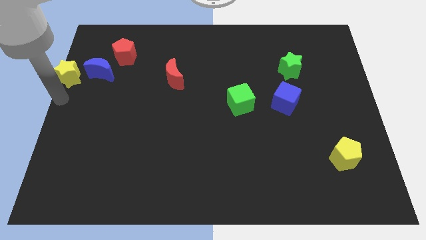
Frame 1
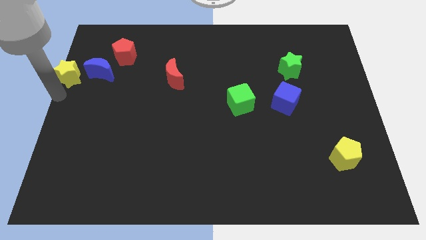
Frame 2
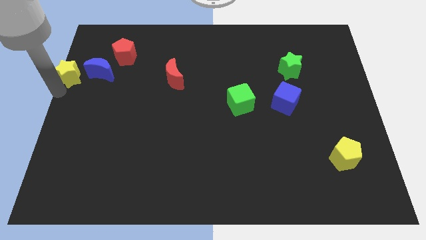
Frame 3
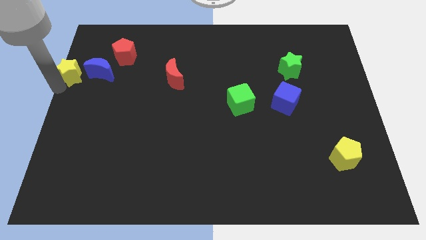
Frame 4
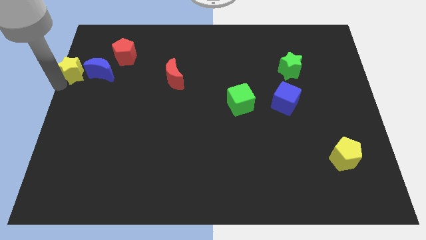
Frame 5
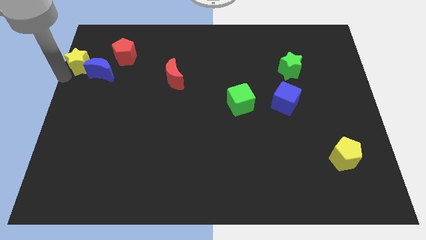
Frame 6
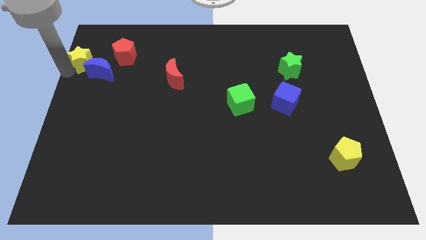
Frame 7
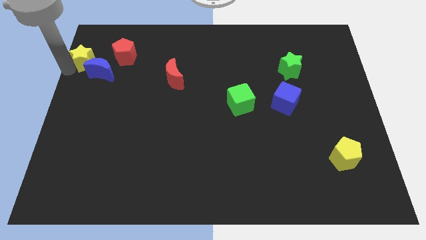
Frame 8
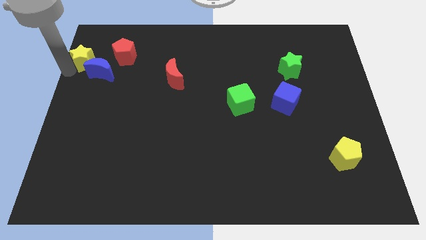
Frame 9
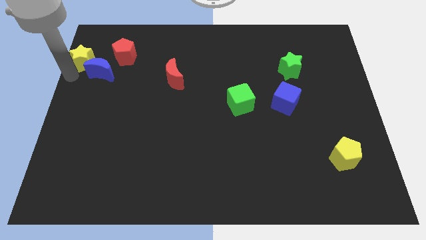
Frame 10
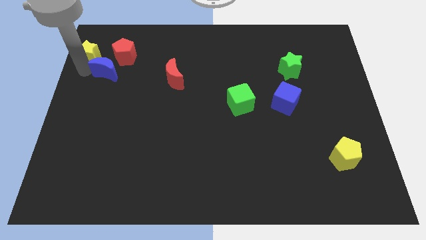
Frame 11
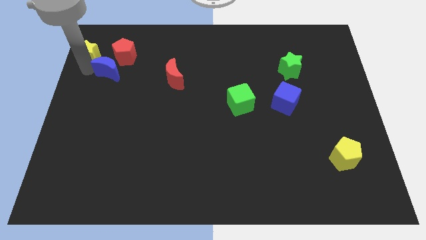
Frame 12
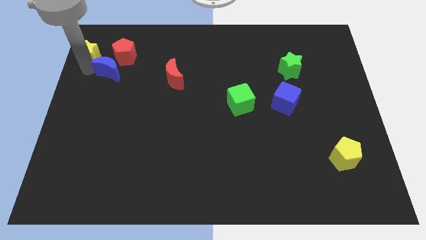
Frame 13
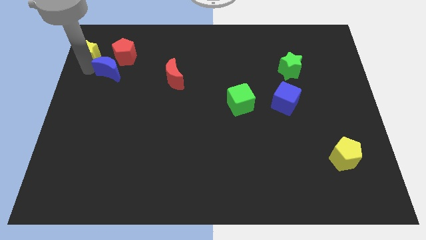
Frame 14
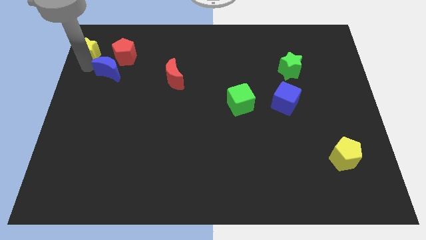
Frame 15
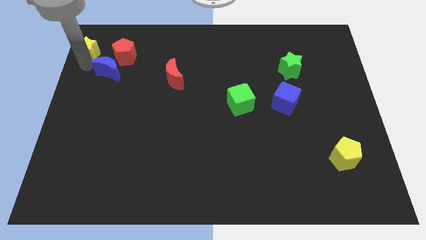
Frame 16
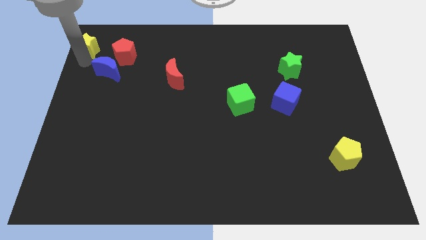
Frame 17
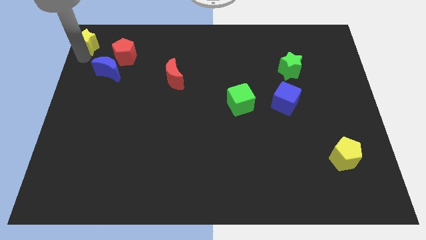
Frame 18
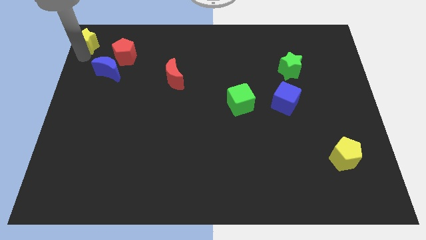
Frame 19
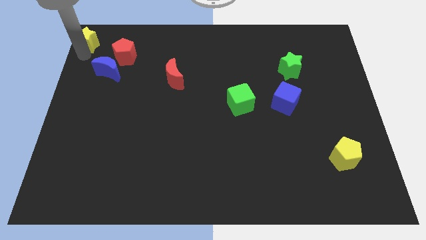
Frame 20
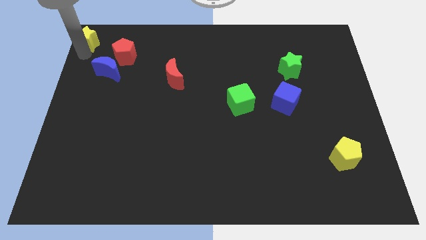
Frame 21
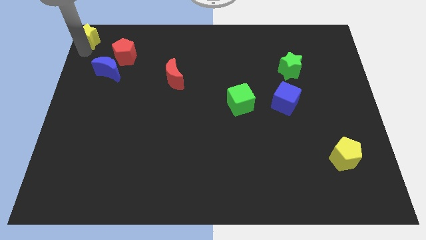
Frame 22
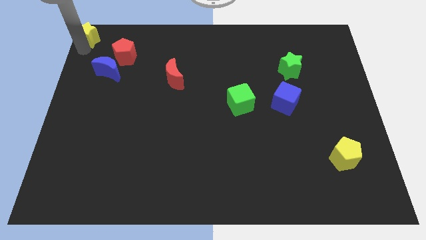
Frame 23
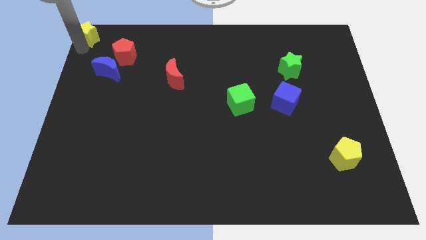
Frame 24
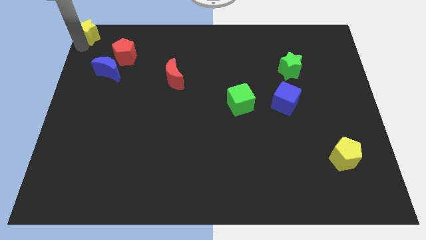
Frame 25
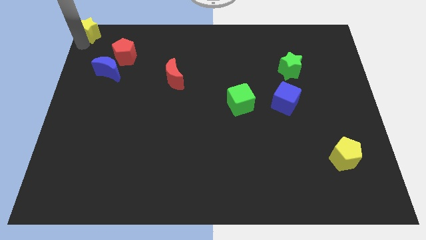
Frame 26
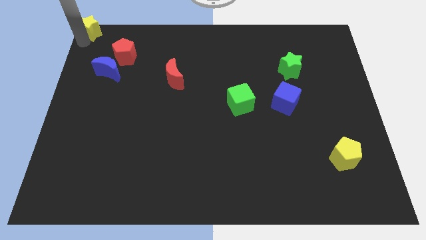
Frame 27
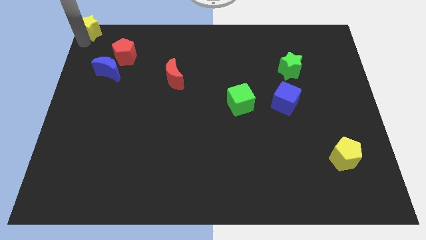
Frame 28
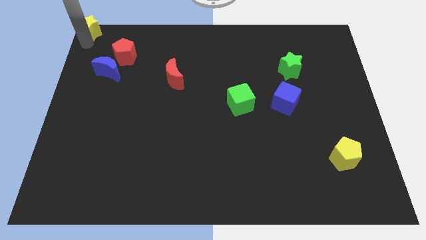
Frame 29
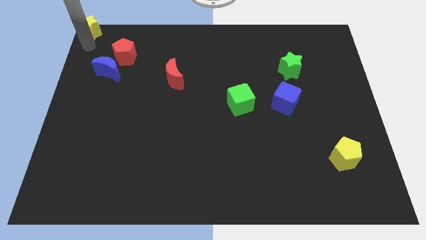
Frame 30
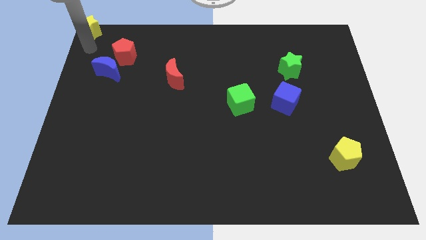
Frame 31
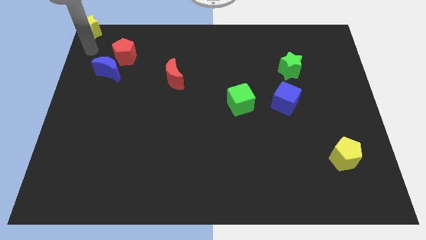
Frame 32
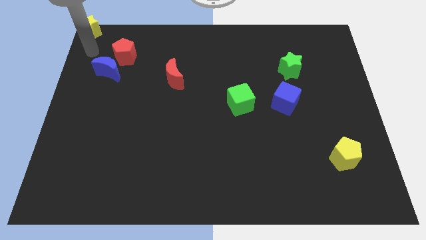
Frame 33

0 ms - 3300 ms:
place the yellow star towards the top left corner

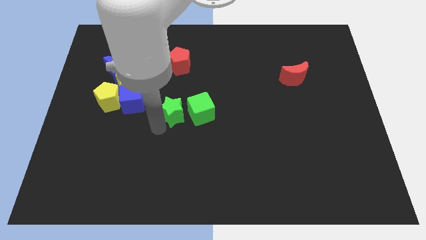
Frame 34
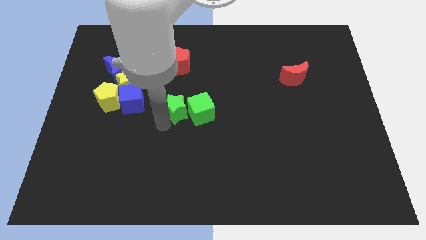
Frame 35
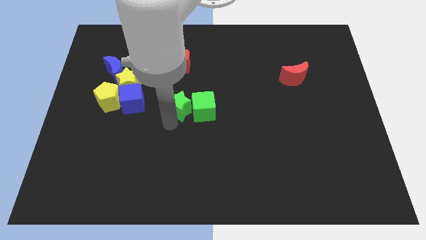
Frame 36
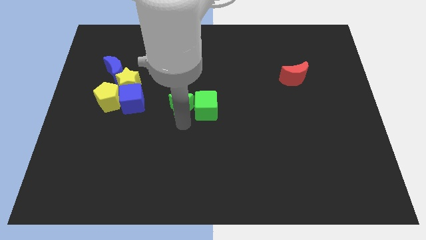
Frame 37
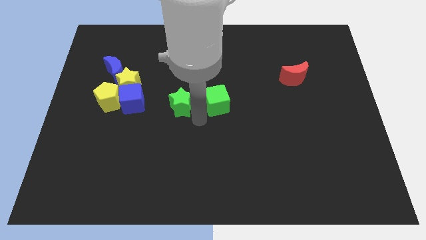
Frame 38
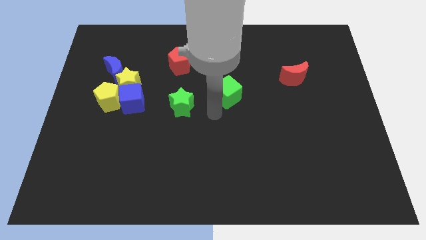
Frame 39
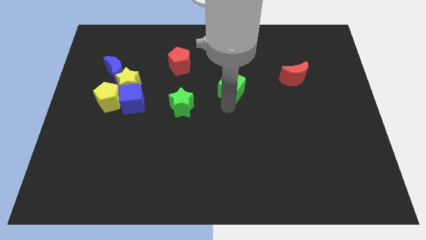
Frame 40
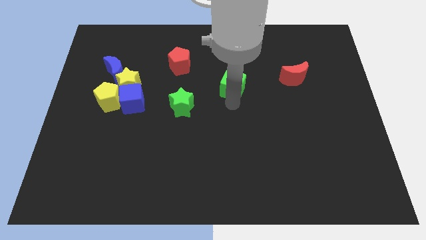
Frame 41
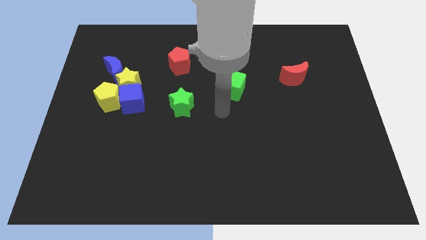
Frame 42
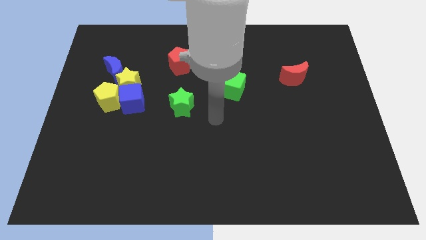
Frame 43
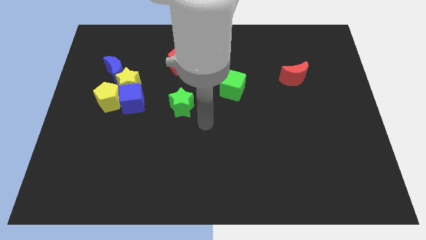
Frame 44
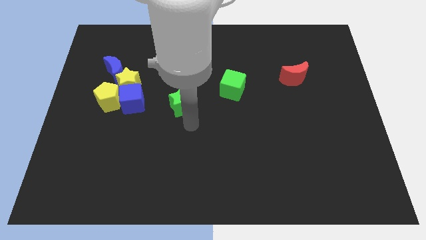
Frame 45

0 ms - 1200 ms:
move green cube away from the green star

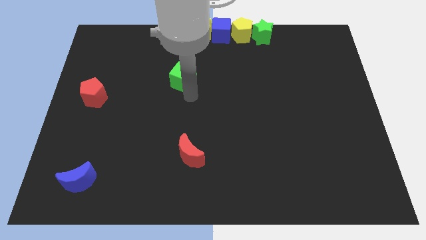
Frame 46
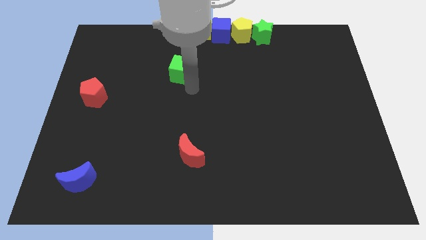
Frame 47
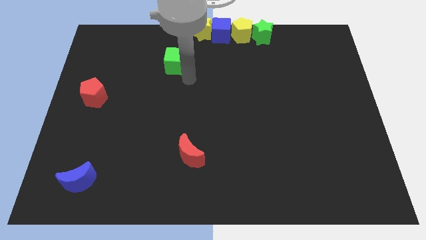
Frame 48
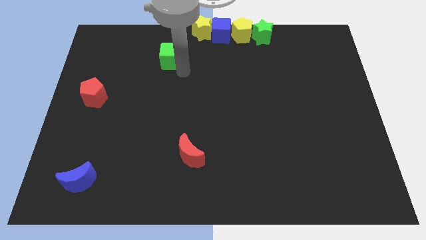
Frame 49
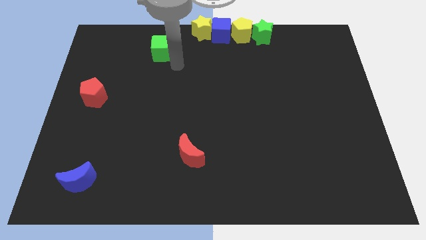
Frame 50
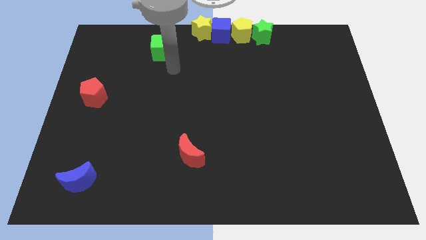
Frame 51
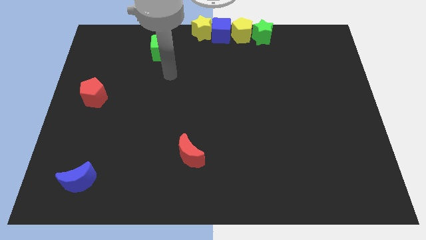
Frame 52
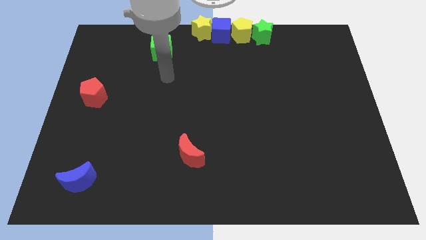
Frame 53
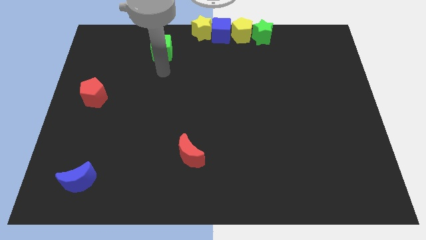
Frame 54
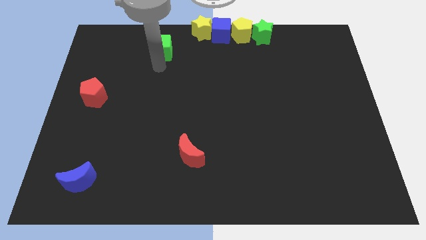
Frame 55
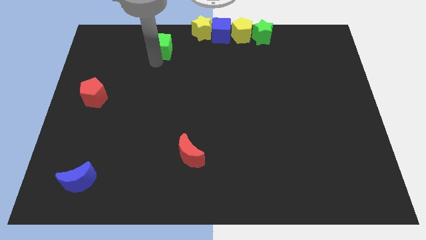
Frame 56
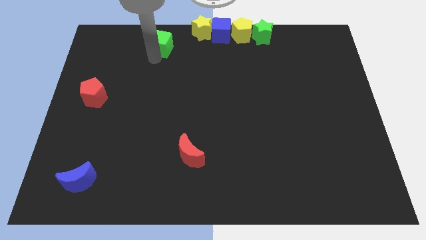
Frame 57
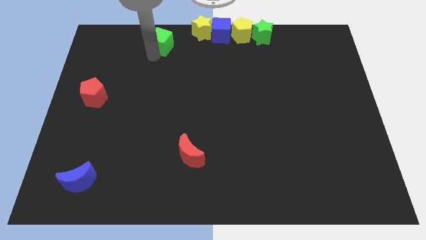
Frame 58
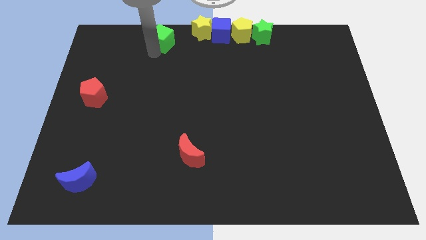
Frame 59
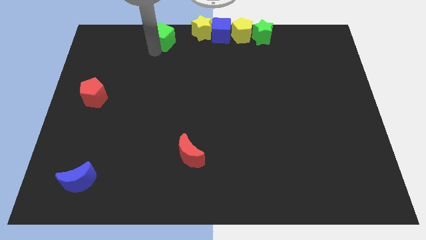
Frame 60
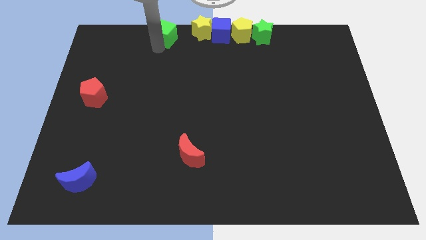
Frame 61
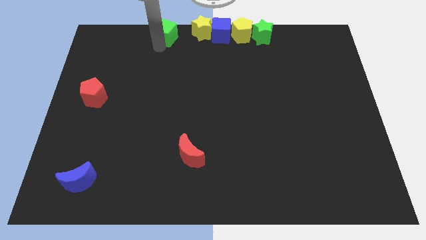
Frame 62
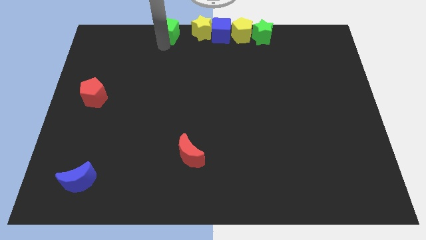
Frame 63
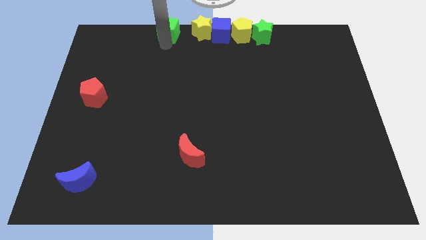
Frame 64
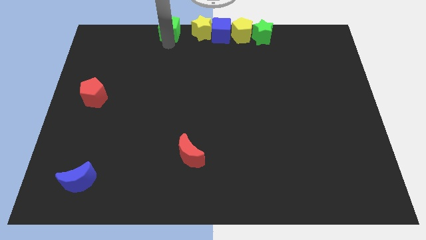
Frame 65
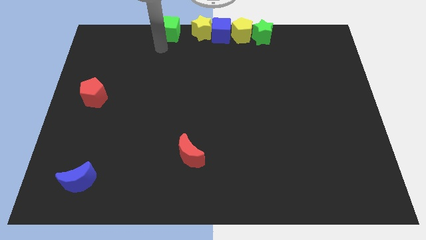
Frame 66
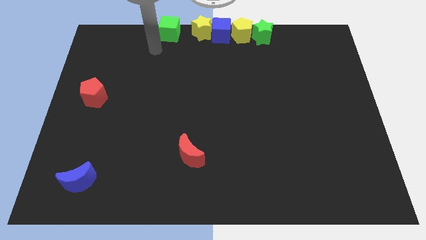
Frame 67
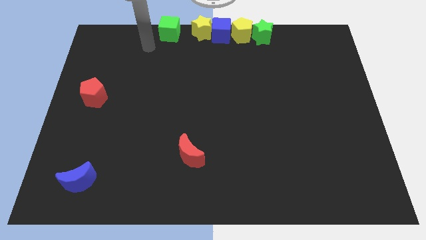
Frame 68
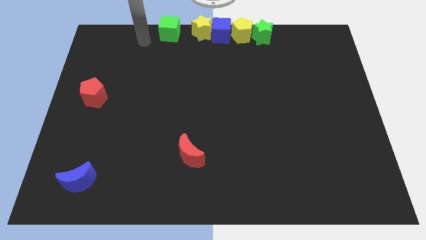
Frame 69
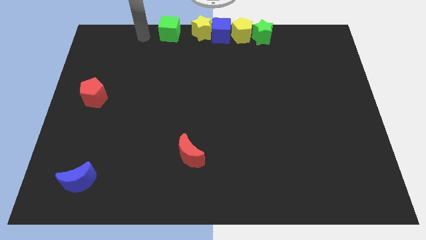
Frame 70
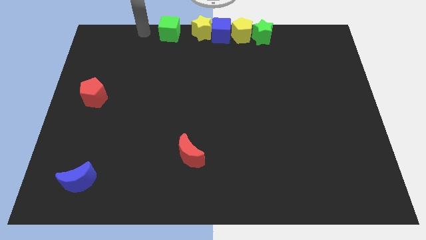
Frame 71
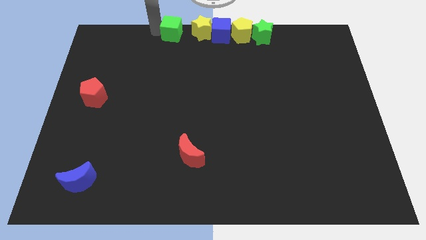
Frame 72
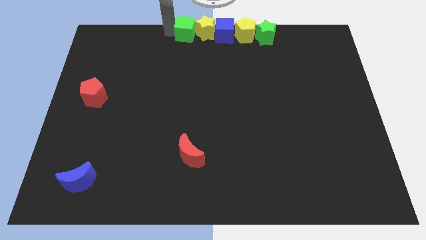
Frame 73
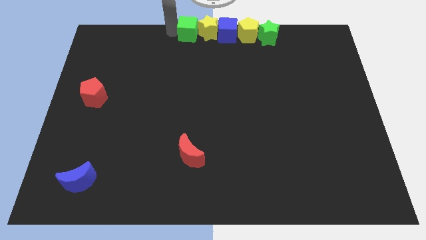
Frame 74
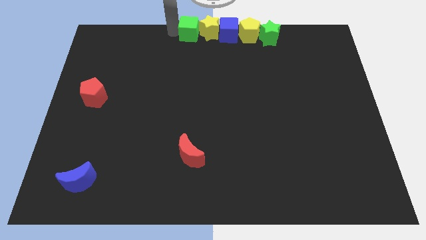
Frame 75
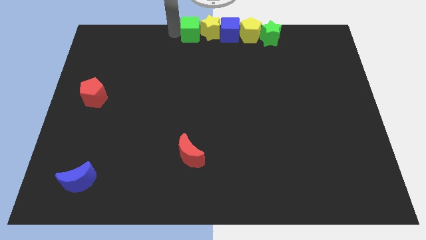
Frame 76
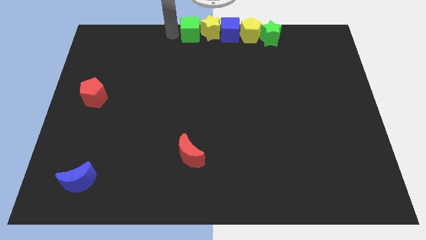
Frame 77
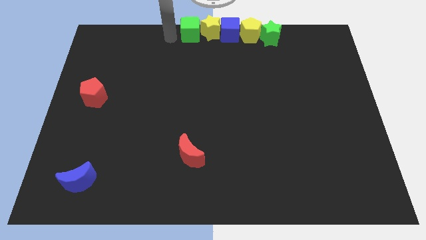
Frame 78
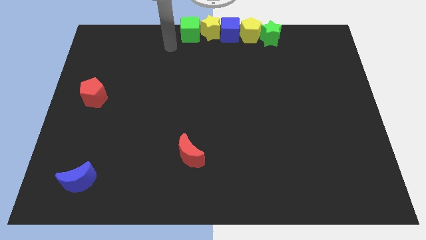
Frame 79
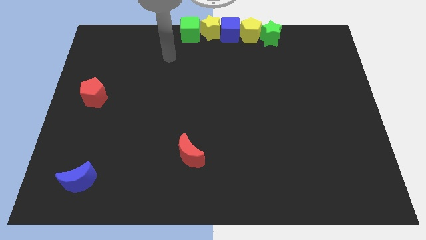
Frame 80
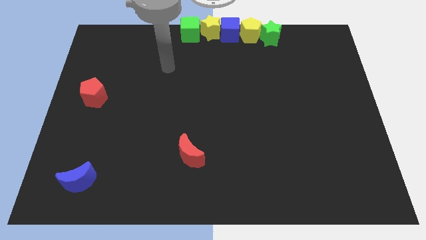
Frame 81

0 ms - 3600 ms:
push the green cube to the left of the yellow star

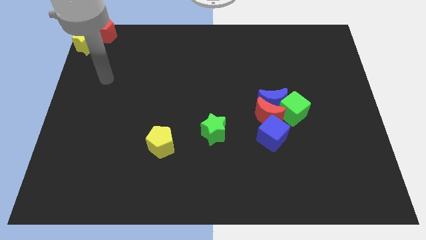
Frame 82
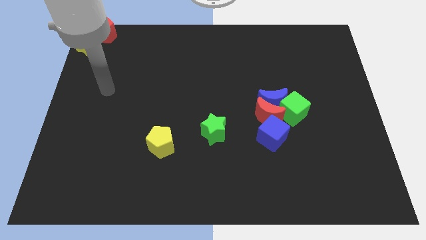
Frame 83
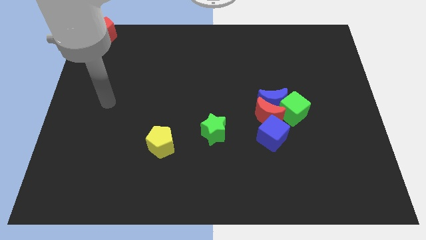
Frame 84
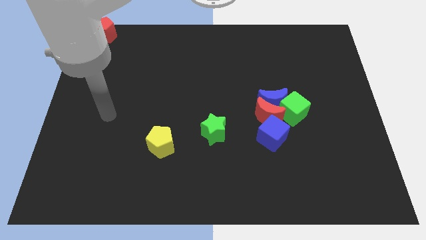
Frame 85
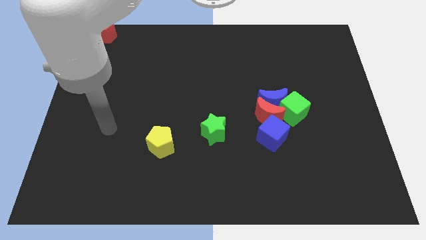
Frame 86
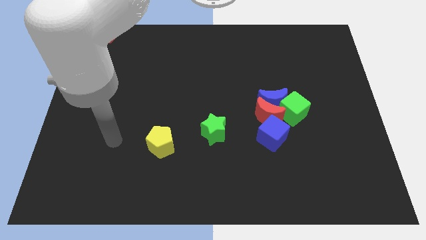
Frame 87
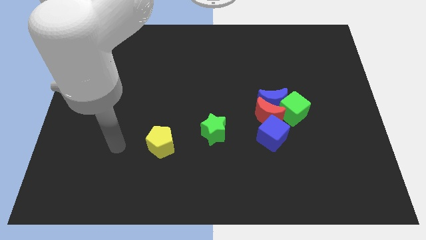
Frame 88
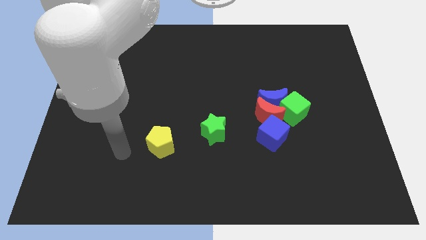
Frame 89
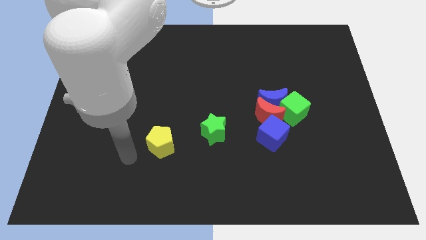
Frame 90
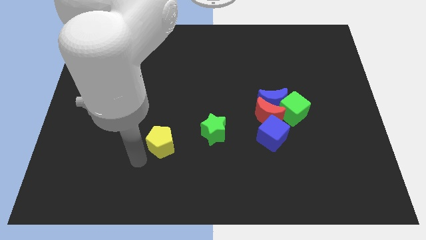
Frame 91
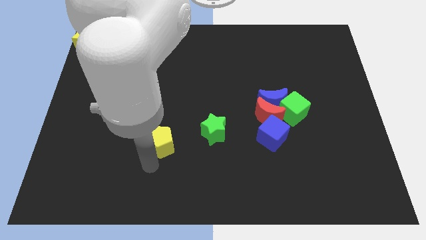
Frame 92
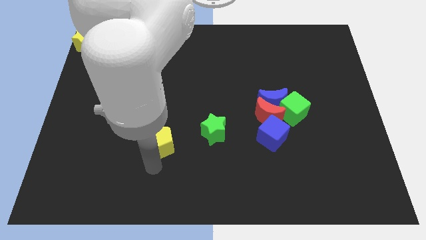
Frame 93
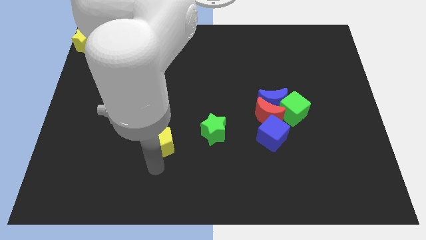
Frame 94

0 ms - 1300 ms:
place your arm below yellow pentagon
